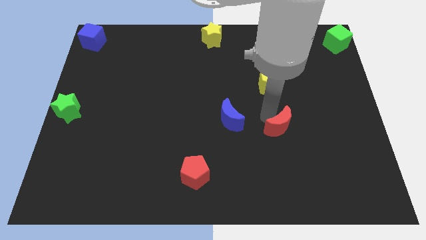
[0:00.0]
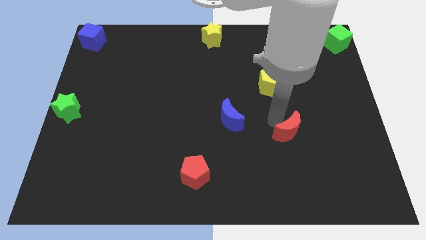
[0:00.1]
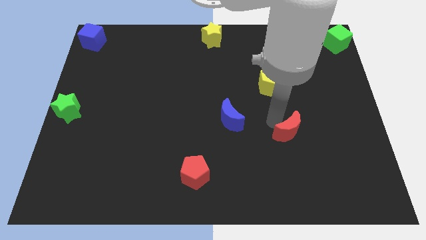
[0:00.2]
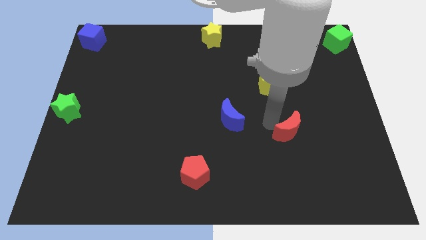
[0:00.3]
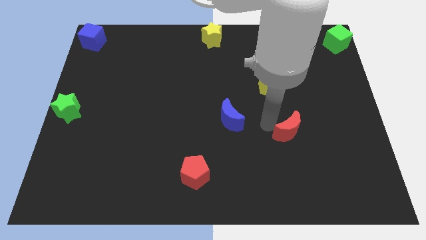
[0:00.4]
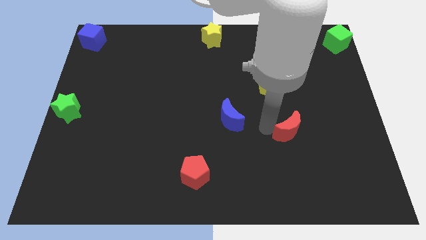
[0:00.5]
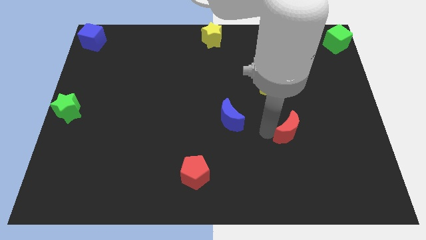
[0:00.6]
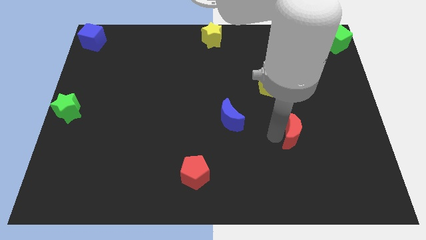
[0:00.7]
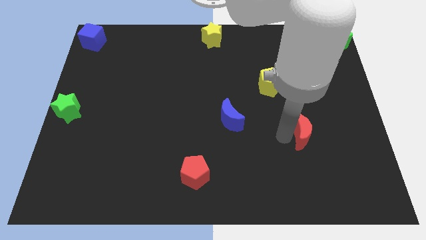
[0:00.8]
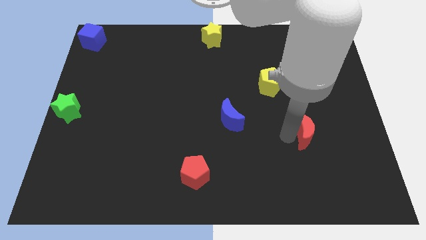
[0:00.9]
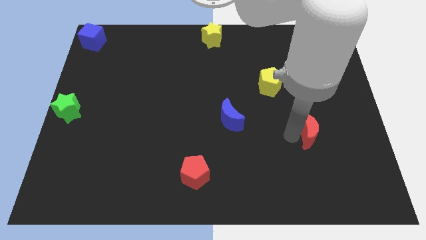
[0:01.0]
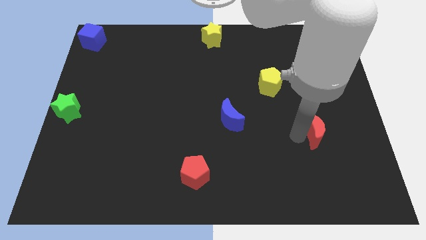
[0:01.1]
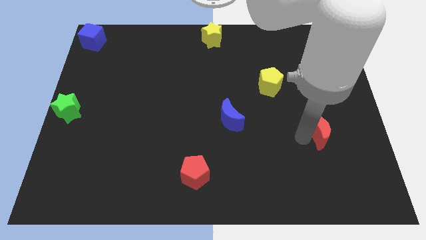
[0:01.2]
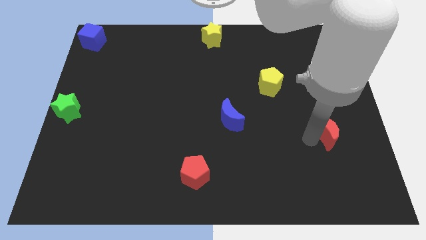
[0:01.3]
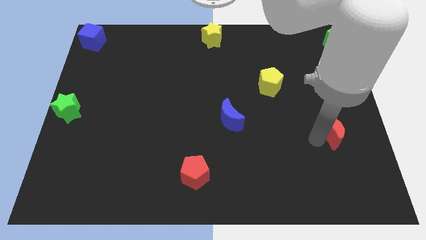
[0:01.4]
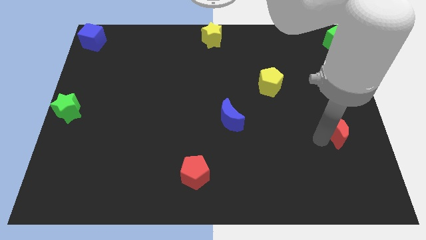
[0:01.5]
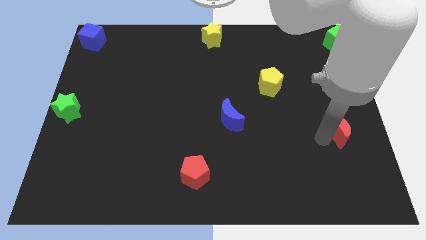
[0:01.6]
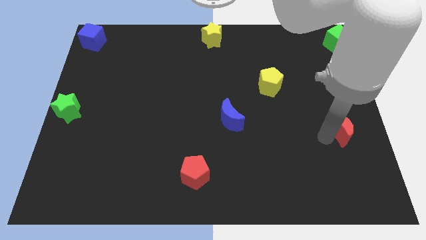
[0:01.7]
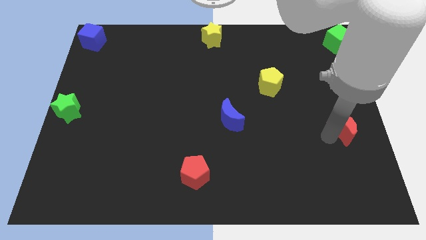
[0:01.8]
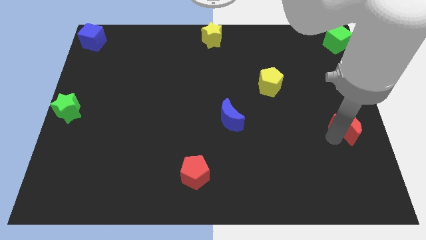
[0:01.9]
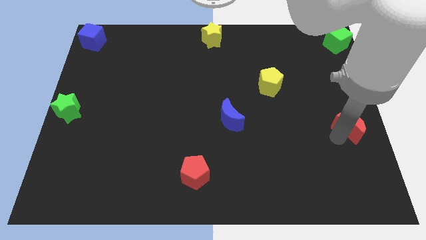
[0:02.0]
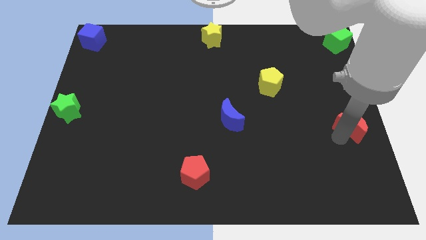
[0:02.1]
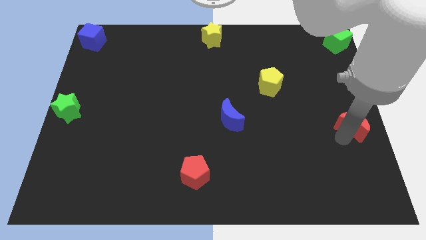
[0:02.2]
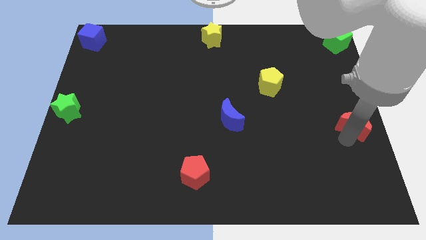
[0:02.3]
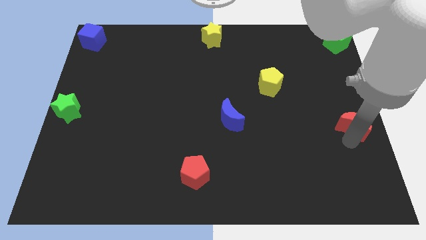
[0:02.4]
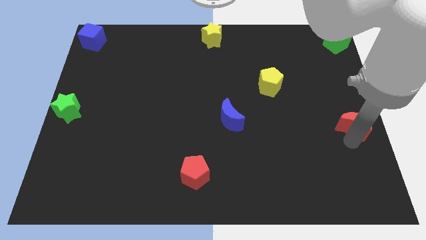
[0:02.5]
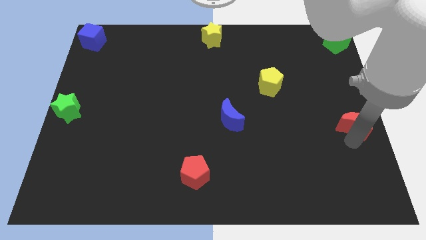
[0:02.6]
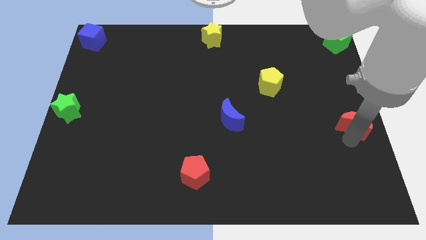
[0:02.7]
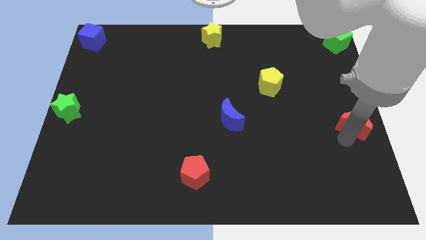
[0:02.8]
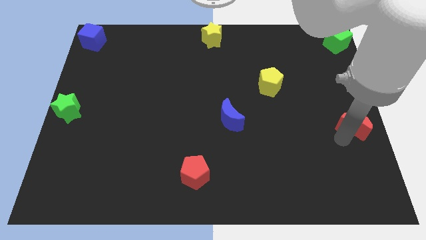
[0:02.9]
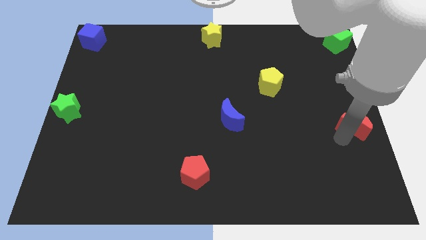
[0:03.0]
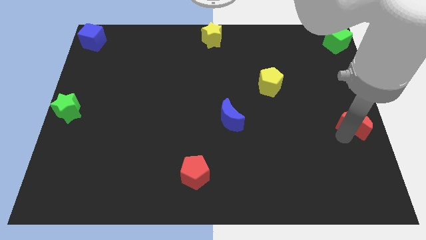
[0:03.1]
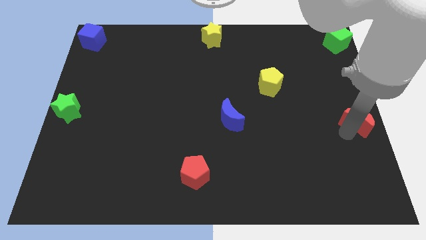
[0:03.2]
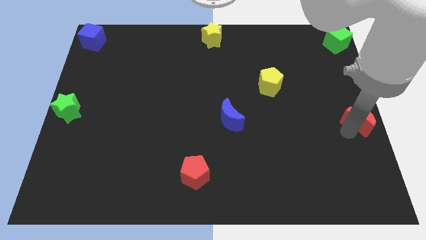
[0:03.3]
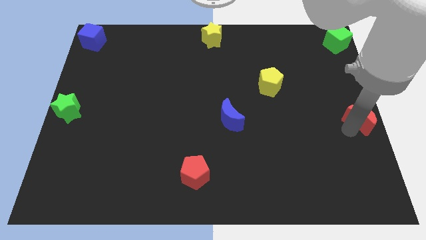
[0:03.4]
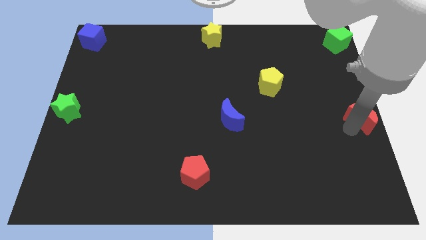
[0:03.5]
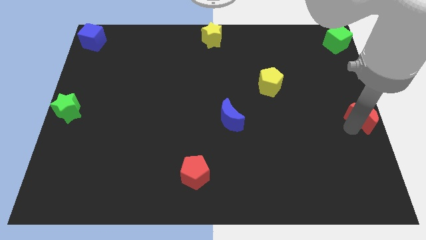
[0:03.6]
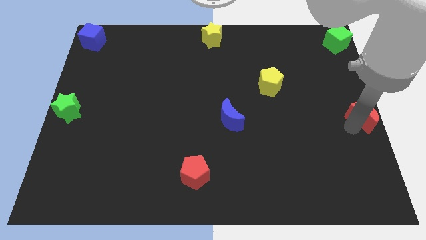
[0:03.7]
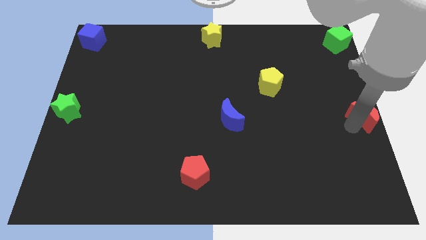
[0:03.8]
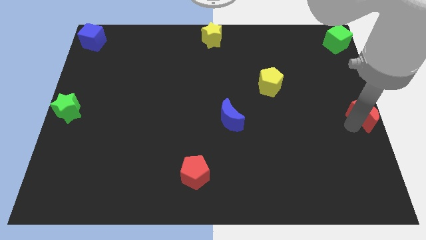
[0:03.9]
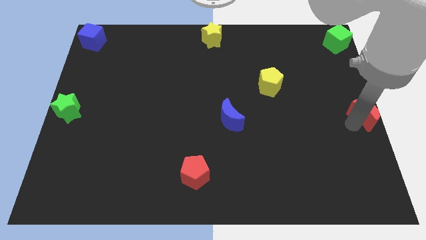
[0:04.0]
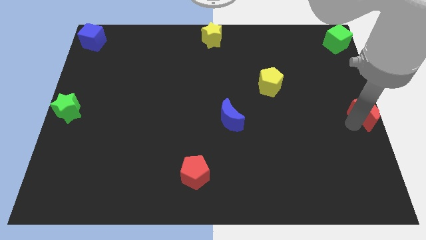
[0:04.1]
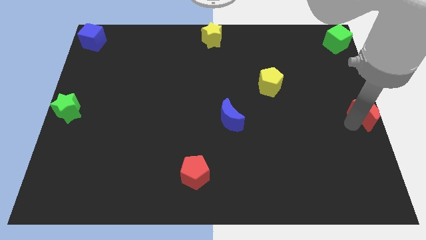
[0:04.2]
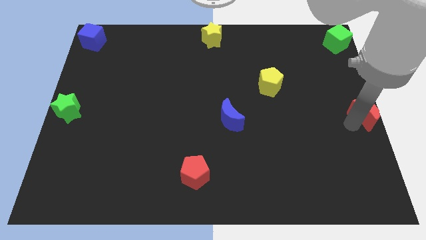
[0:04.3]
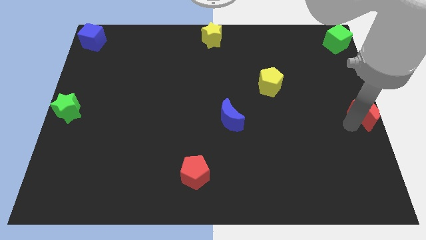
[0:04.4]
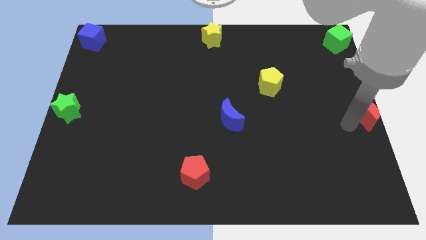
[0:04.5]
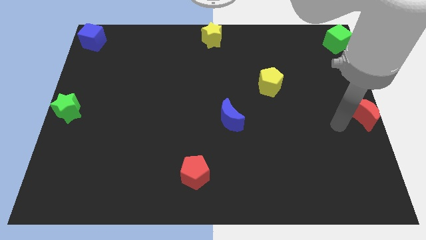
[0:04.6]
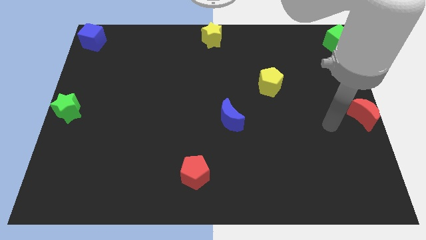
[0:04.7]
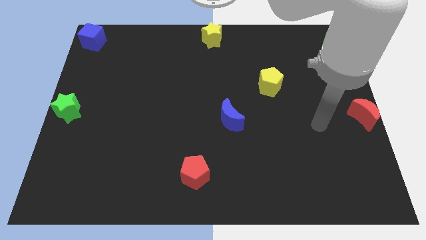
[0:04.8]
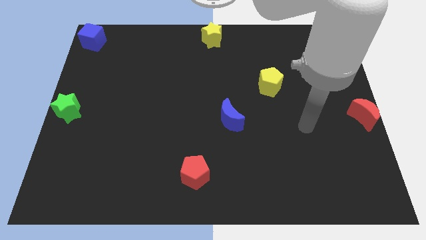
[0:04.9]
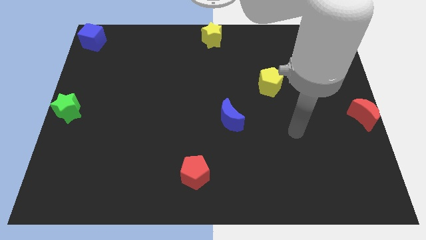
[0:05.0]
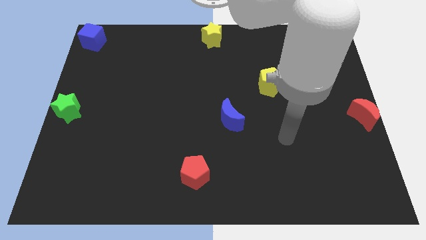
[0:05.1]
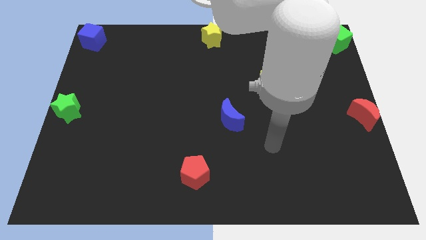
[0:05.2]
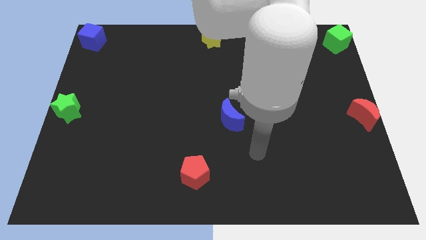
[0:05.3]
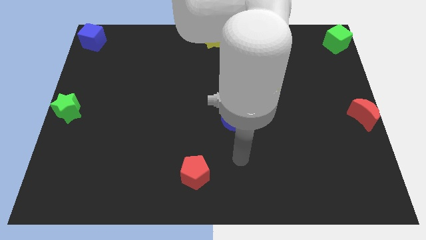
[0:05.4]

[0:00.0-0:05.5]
move the red moon to the right middle

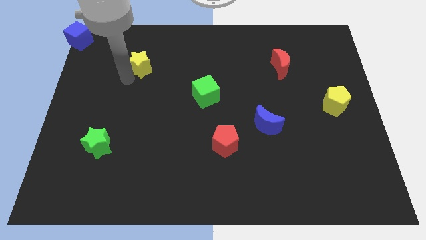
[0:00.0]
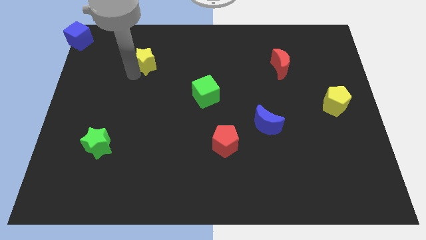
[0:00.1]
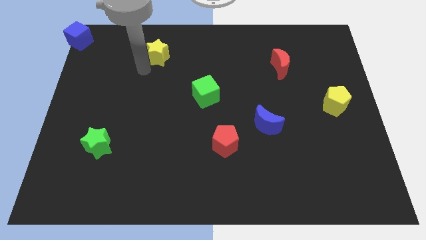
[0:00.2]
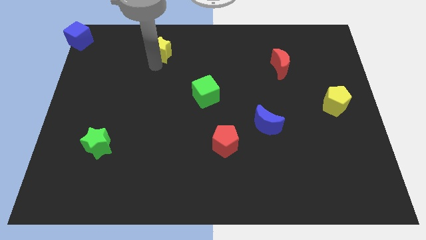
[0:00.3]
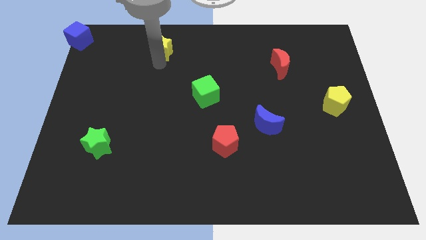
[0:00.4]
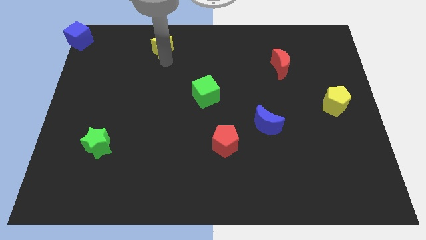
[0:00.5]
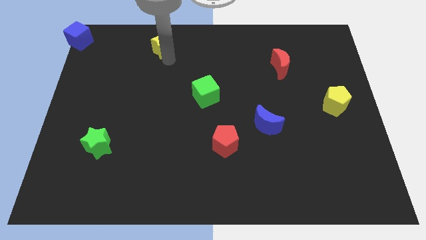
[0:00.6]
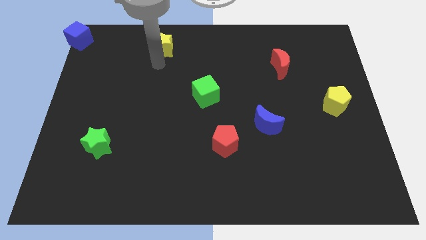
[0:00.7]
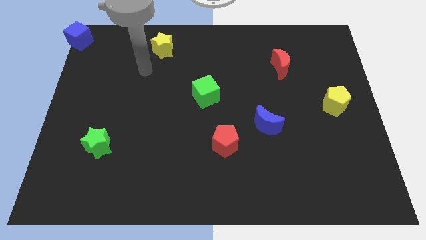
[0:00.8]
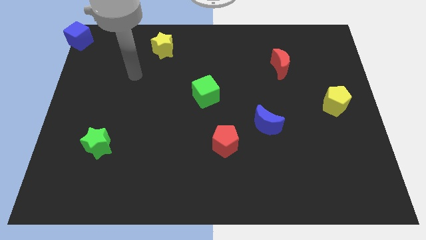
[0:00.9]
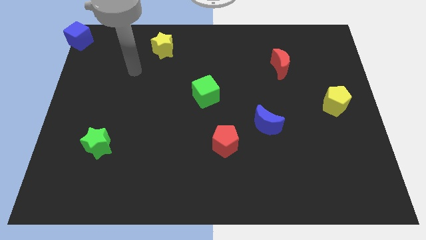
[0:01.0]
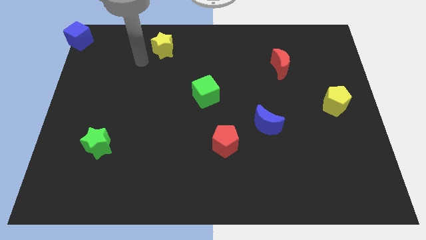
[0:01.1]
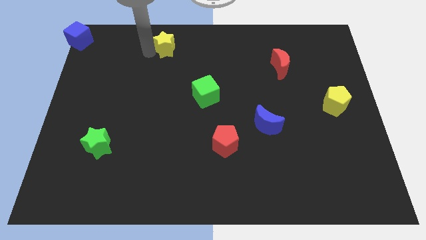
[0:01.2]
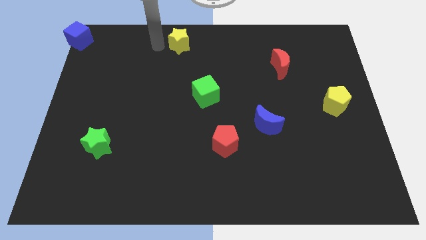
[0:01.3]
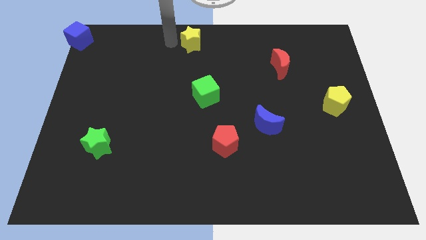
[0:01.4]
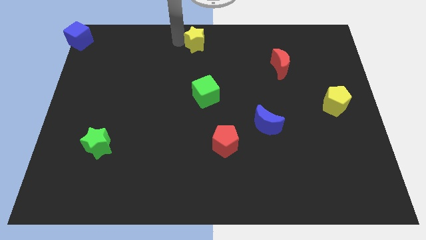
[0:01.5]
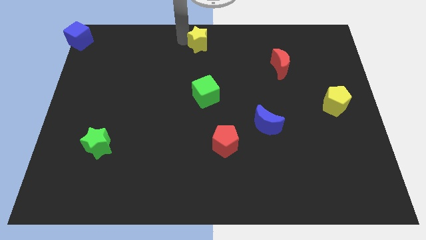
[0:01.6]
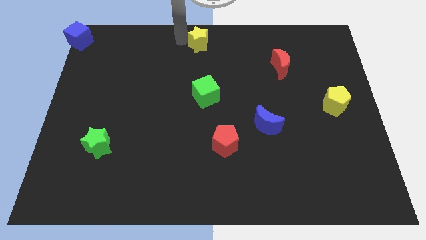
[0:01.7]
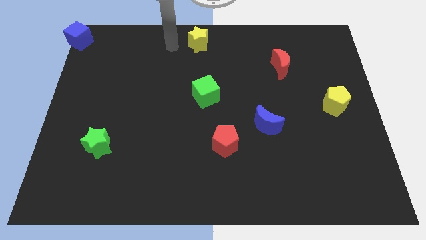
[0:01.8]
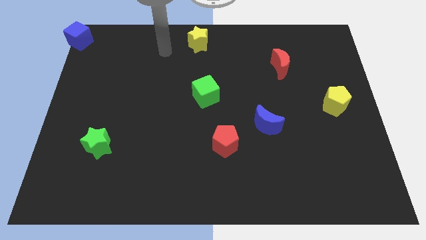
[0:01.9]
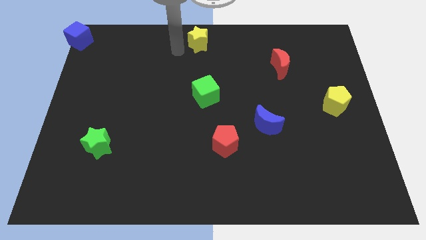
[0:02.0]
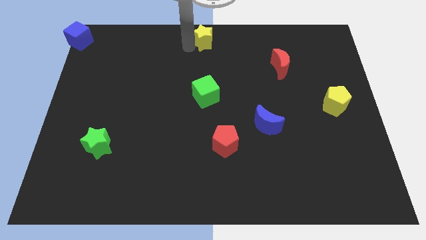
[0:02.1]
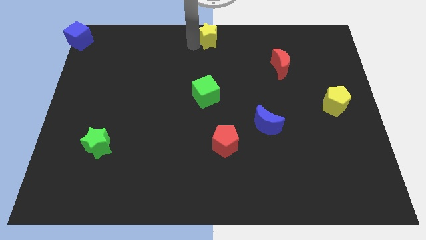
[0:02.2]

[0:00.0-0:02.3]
place the yellow star at the top center of the board

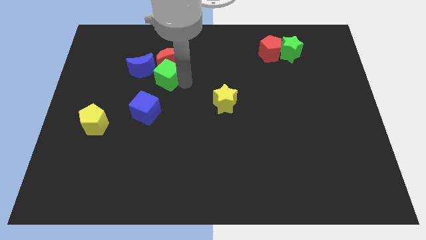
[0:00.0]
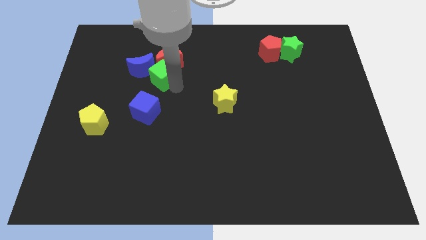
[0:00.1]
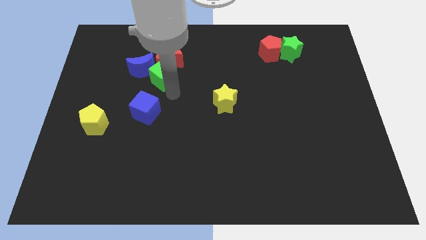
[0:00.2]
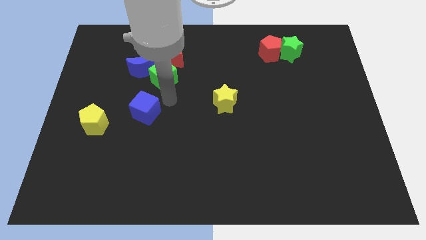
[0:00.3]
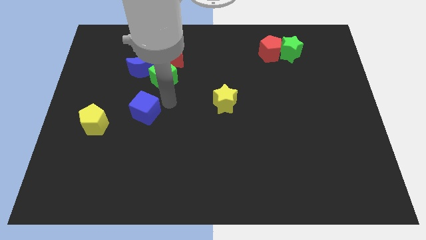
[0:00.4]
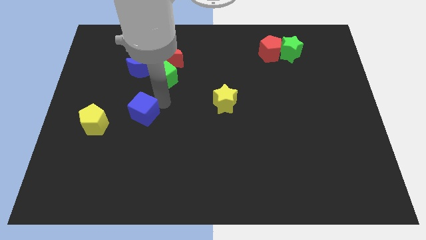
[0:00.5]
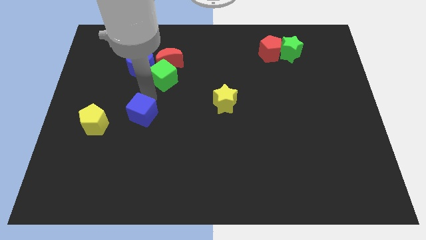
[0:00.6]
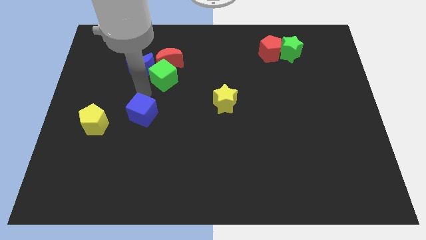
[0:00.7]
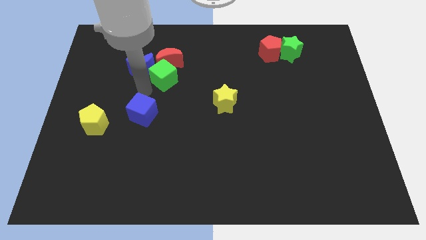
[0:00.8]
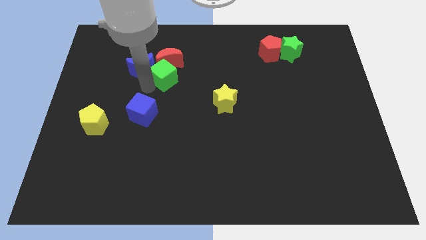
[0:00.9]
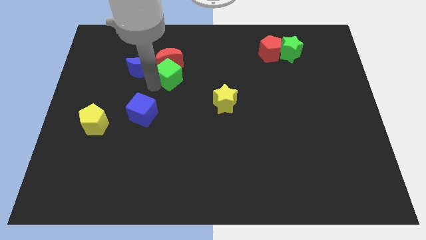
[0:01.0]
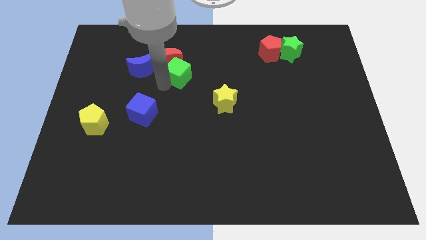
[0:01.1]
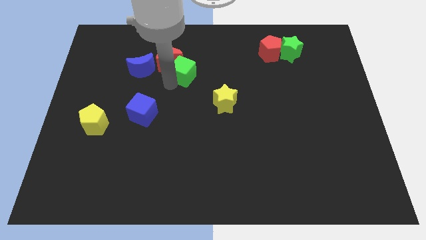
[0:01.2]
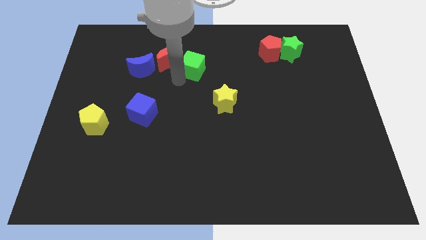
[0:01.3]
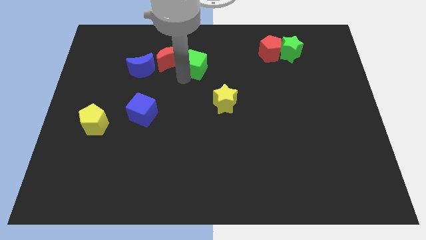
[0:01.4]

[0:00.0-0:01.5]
separate the green cube away from the red crescent
